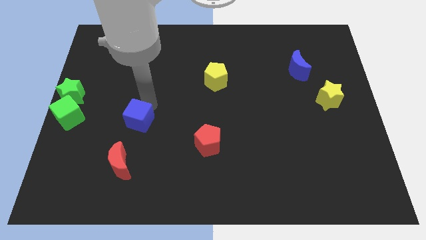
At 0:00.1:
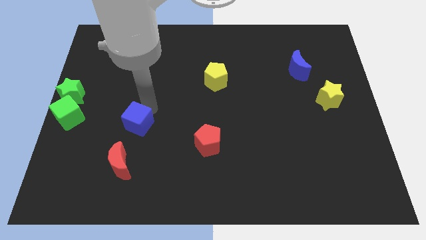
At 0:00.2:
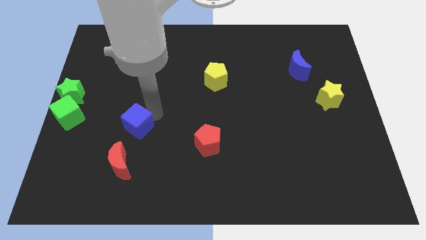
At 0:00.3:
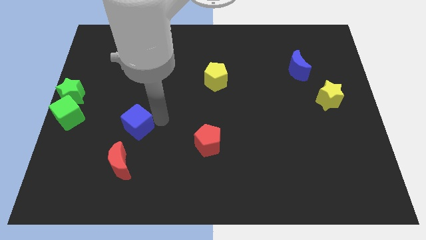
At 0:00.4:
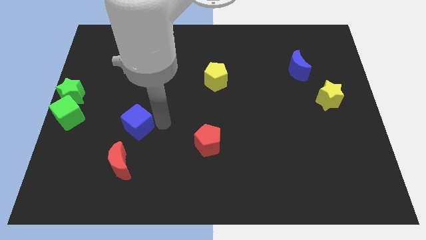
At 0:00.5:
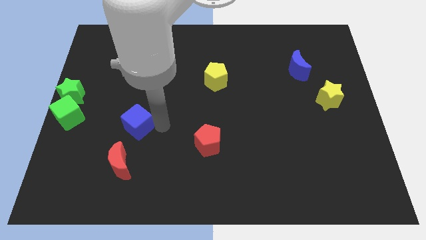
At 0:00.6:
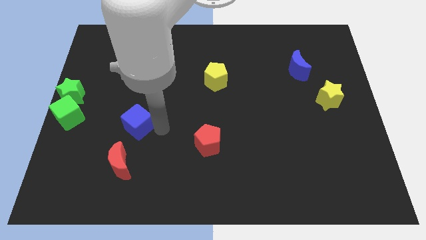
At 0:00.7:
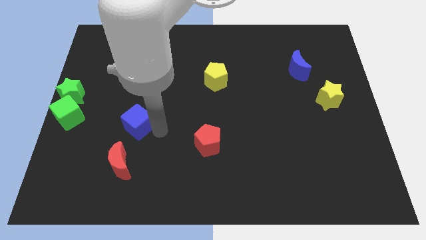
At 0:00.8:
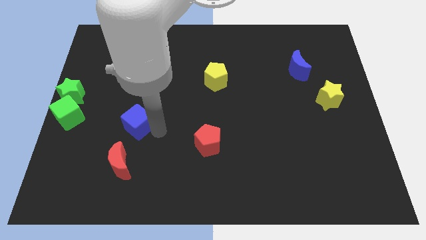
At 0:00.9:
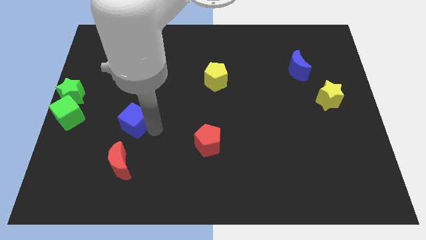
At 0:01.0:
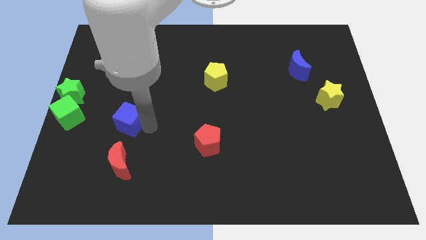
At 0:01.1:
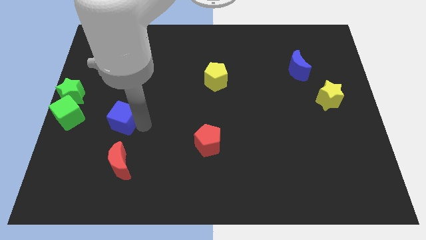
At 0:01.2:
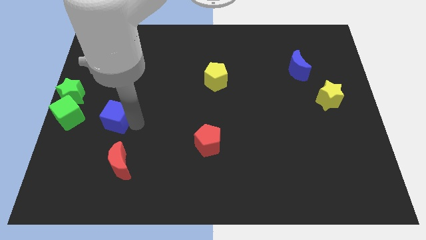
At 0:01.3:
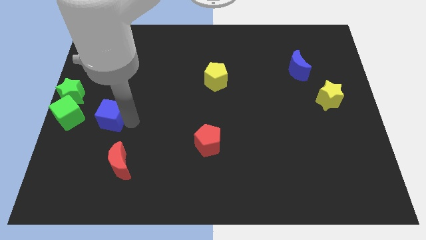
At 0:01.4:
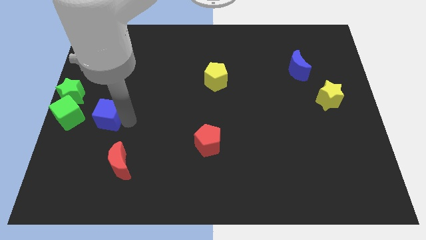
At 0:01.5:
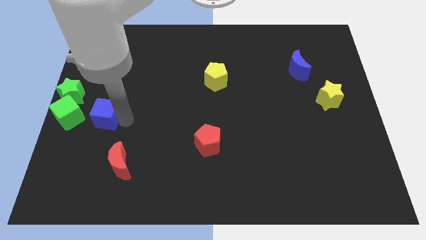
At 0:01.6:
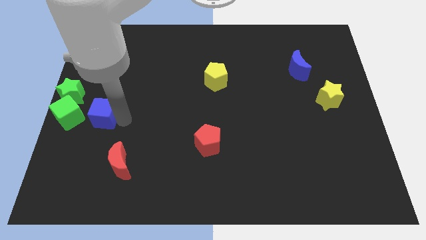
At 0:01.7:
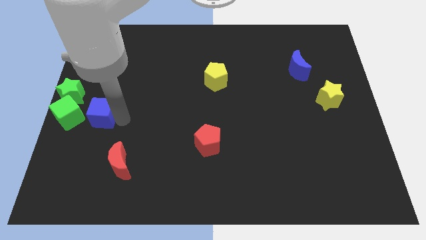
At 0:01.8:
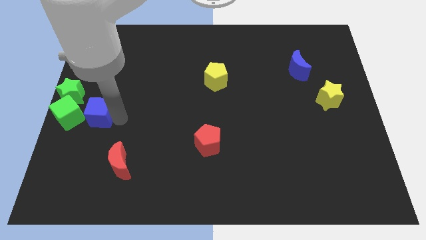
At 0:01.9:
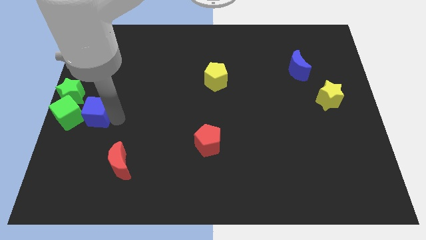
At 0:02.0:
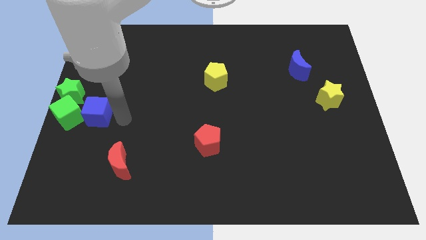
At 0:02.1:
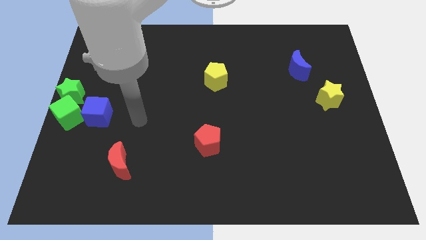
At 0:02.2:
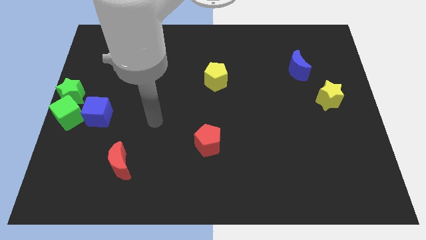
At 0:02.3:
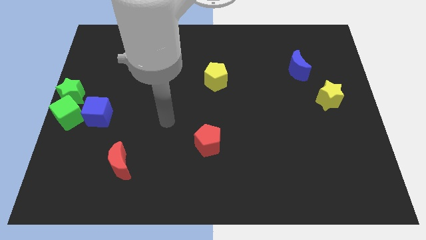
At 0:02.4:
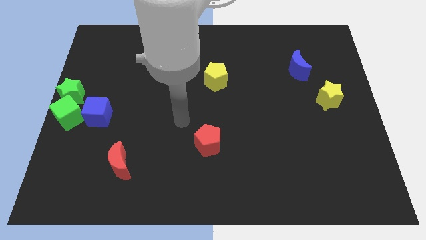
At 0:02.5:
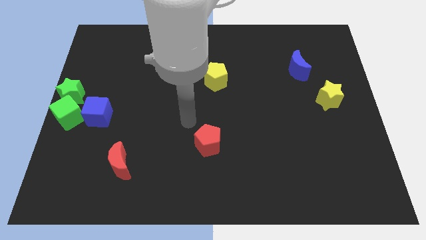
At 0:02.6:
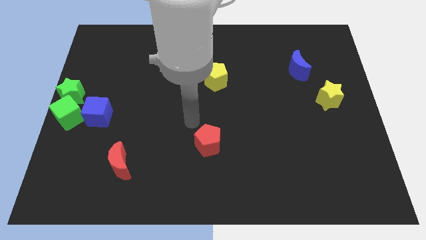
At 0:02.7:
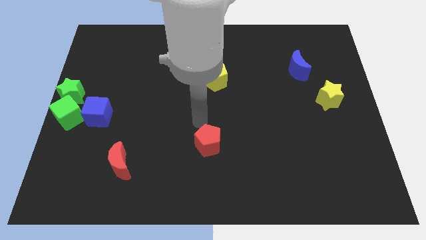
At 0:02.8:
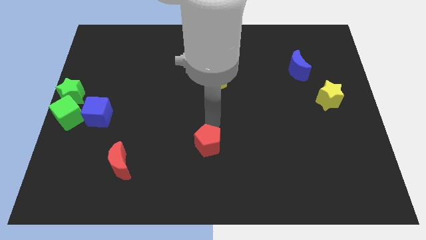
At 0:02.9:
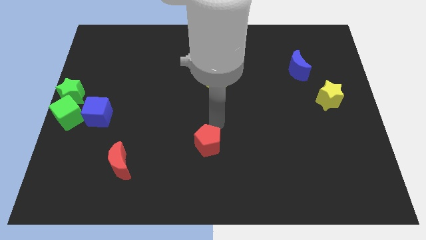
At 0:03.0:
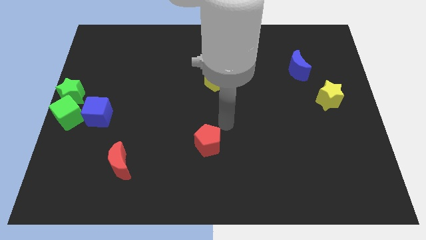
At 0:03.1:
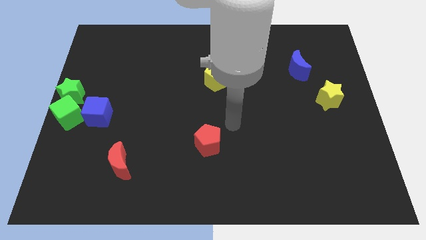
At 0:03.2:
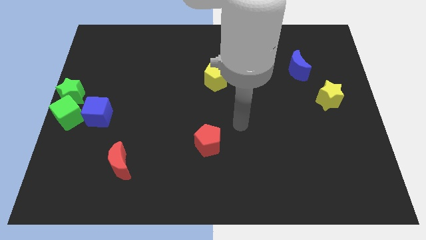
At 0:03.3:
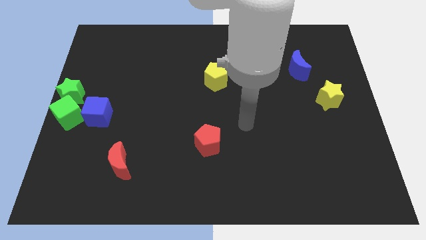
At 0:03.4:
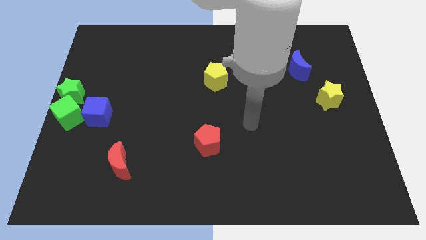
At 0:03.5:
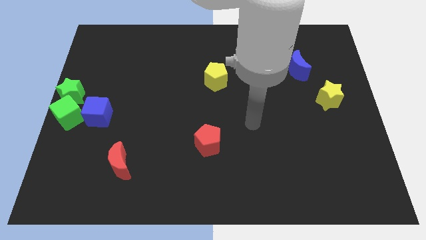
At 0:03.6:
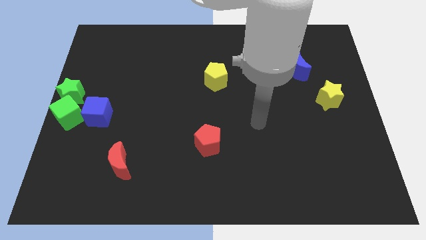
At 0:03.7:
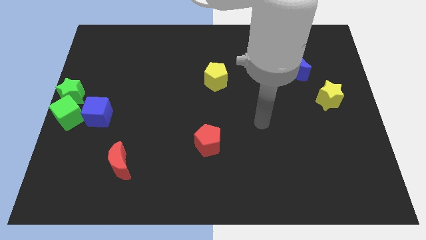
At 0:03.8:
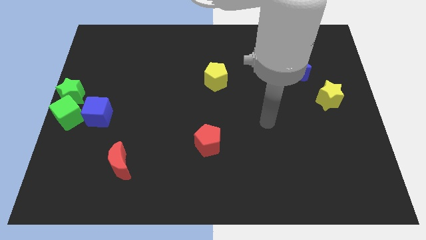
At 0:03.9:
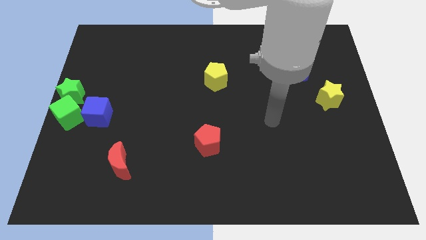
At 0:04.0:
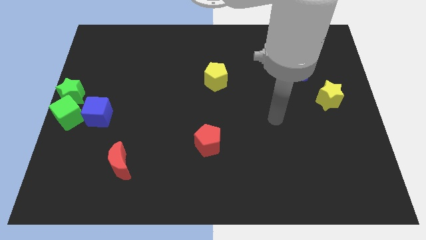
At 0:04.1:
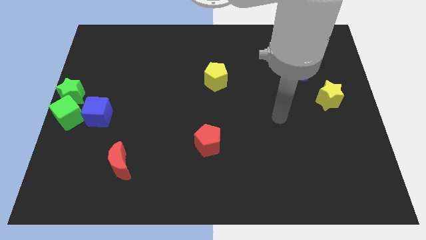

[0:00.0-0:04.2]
slide the blue cube to the right side of the green cube

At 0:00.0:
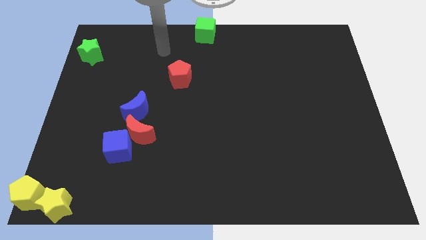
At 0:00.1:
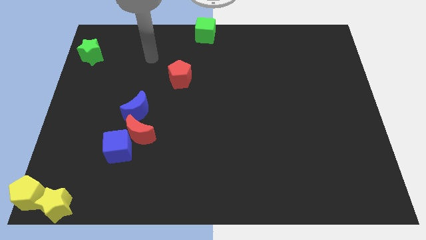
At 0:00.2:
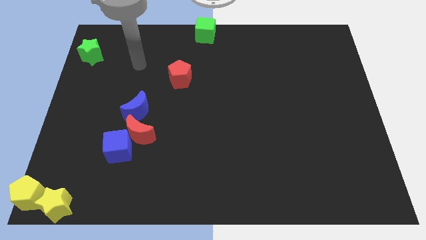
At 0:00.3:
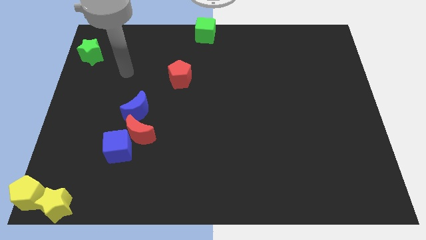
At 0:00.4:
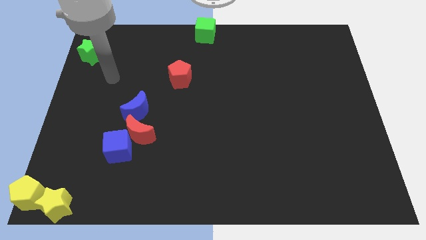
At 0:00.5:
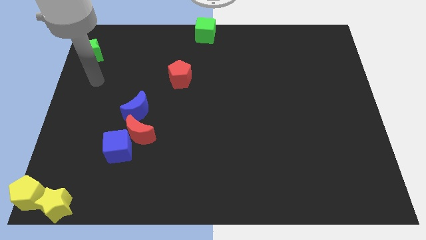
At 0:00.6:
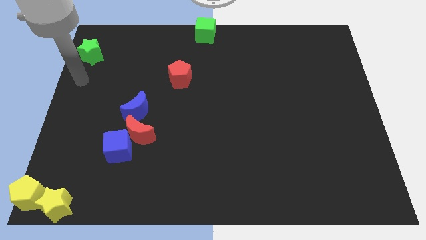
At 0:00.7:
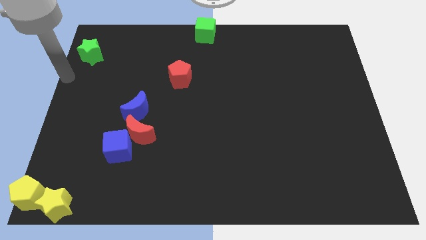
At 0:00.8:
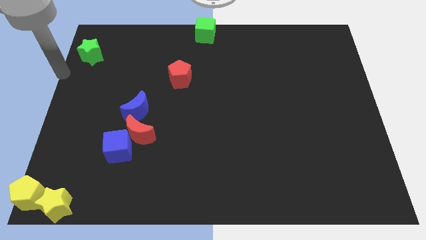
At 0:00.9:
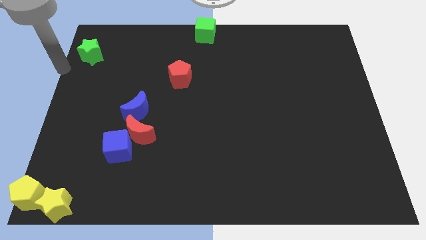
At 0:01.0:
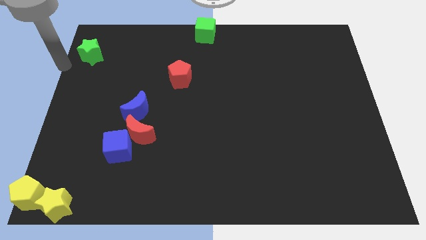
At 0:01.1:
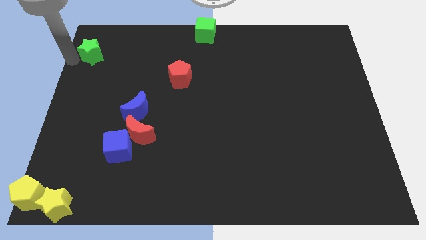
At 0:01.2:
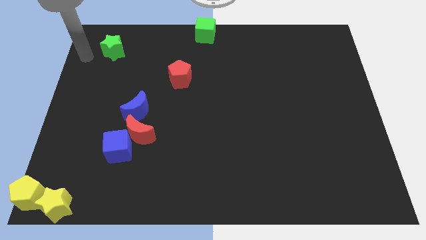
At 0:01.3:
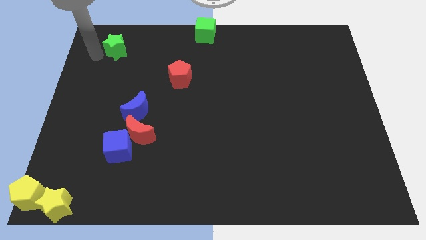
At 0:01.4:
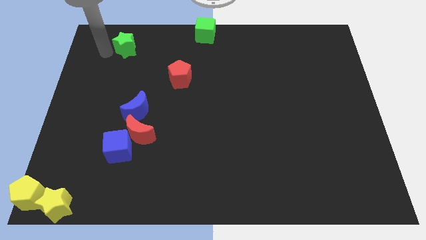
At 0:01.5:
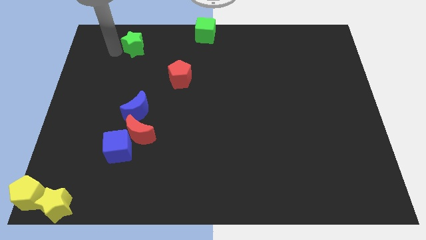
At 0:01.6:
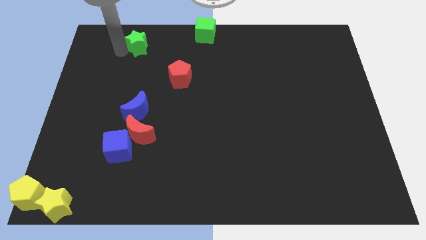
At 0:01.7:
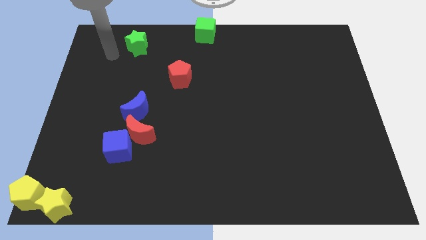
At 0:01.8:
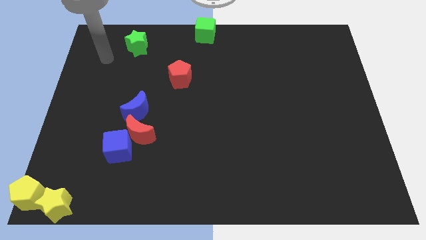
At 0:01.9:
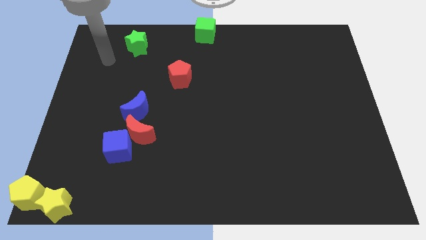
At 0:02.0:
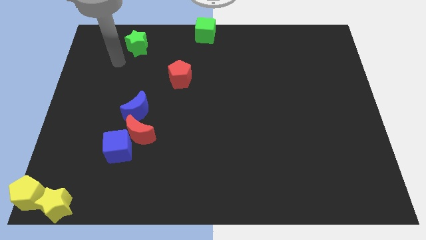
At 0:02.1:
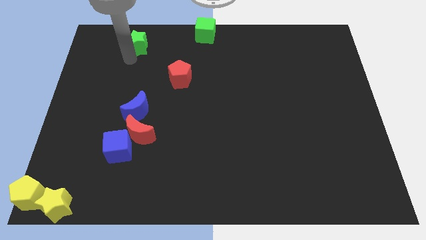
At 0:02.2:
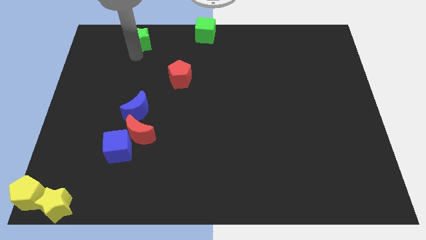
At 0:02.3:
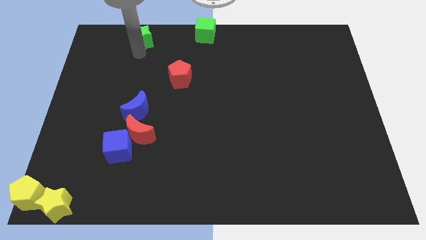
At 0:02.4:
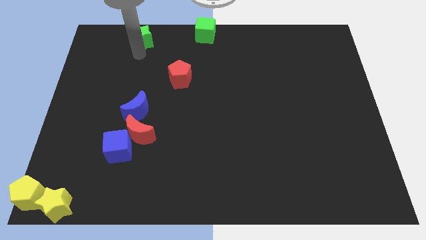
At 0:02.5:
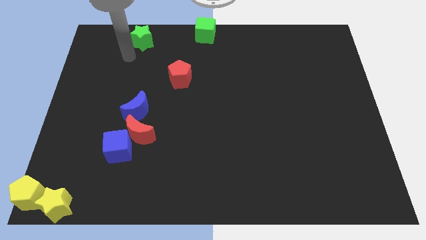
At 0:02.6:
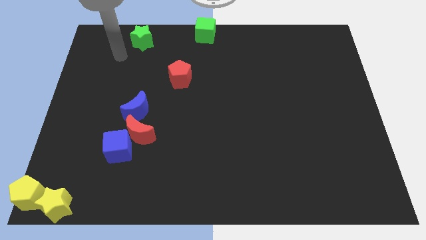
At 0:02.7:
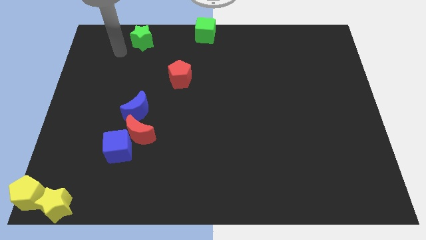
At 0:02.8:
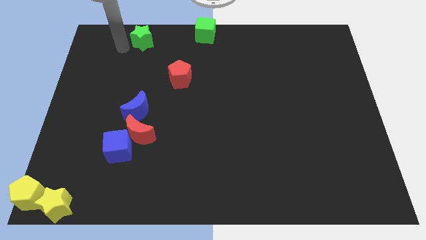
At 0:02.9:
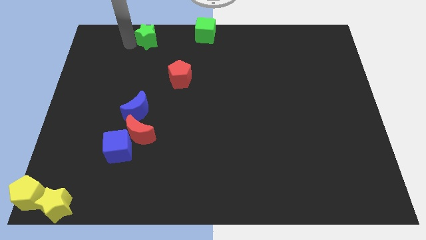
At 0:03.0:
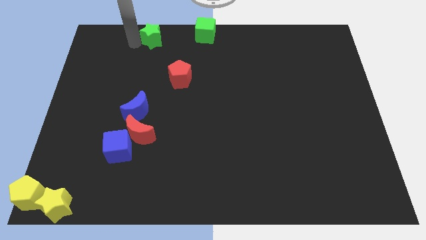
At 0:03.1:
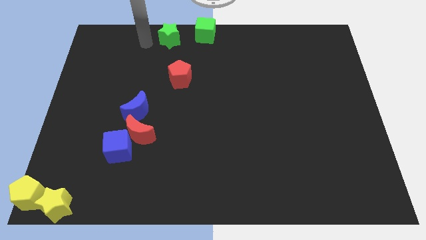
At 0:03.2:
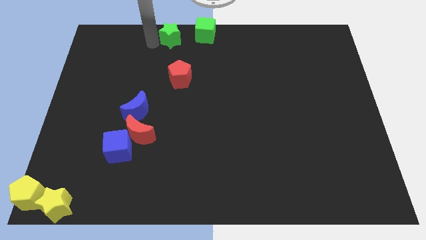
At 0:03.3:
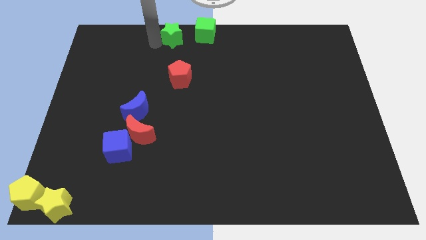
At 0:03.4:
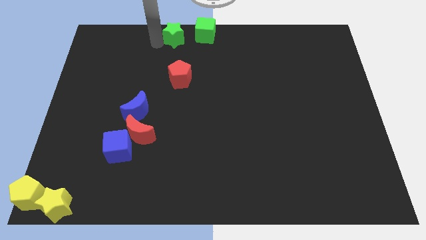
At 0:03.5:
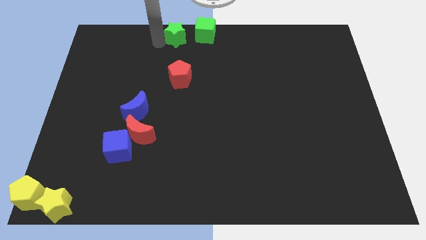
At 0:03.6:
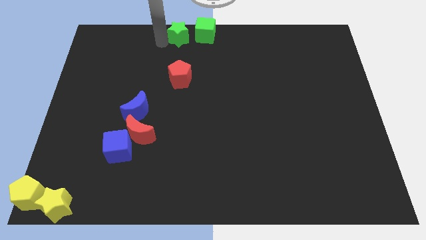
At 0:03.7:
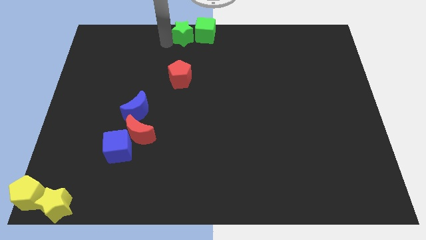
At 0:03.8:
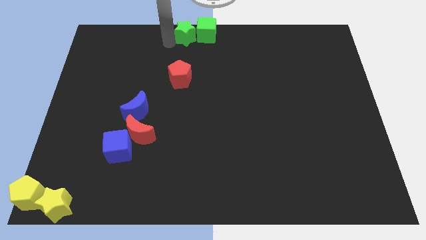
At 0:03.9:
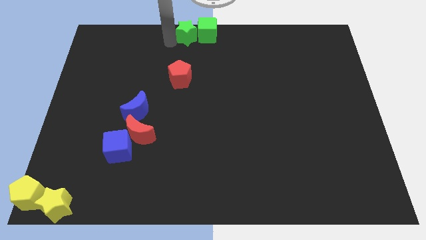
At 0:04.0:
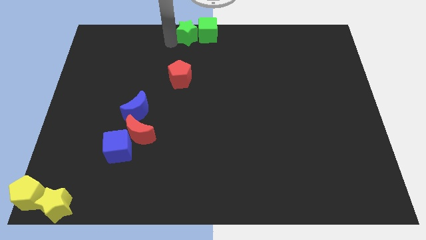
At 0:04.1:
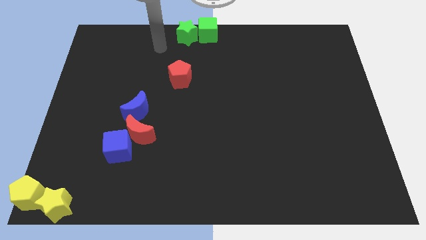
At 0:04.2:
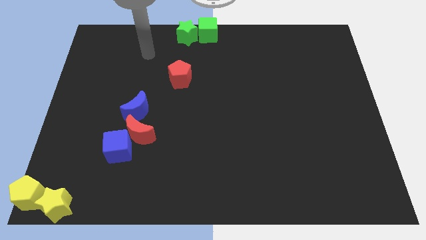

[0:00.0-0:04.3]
push the green star into the green cube

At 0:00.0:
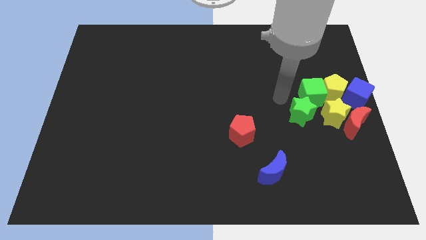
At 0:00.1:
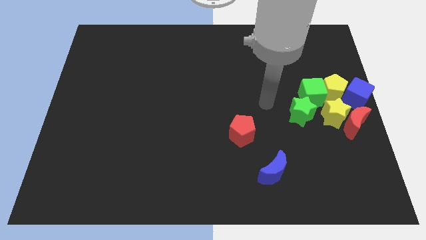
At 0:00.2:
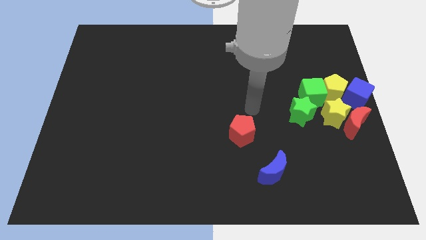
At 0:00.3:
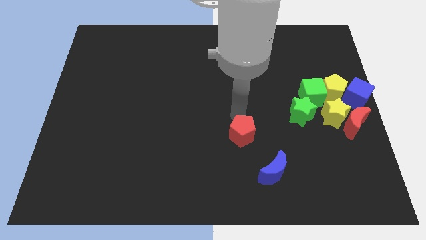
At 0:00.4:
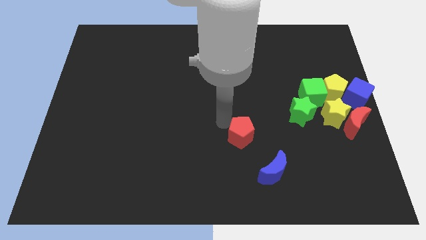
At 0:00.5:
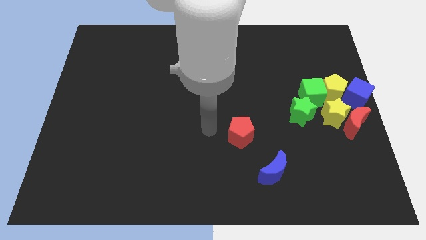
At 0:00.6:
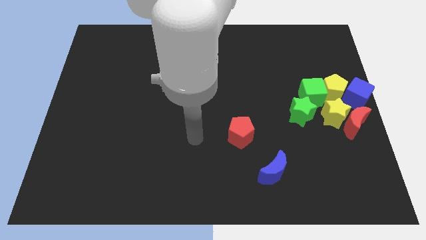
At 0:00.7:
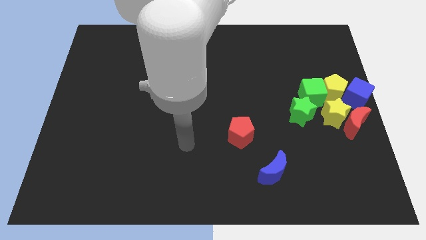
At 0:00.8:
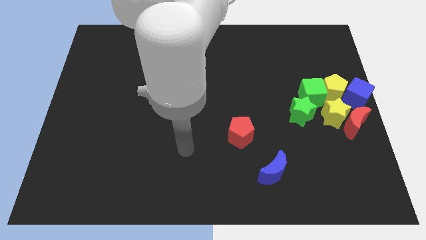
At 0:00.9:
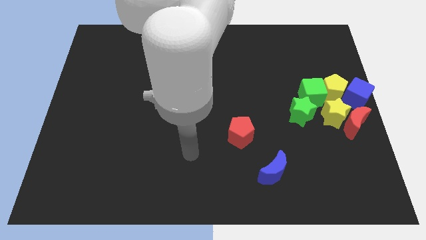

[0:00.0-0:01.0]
slightly touch down the red pentagon
